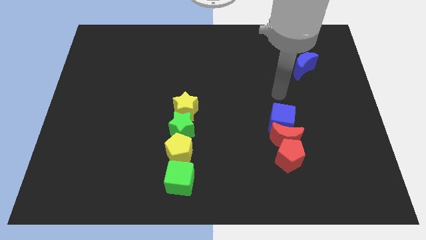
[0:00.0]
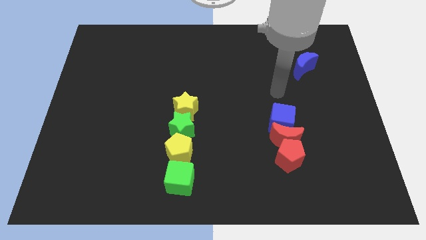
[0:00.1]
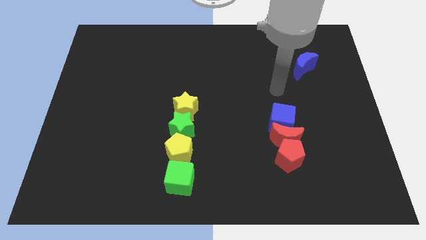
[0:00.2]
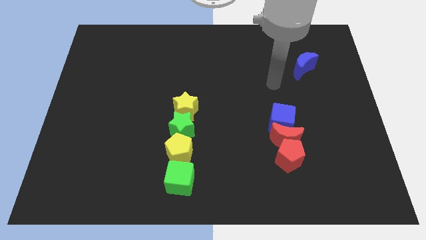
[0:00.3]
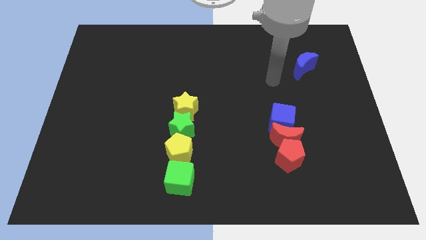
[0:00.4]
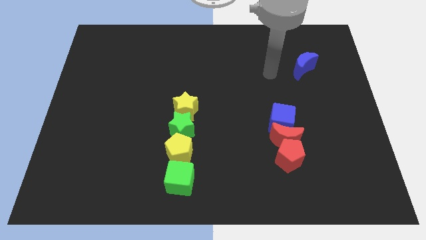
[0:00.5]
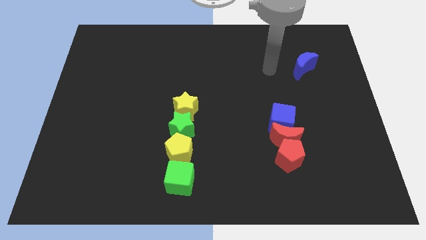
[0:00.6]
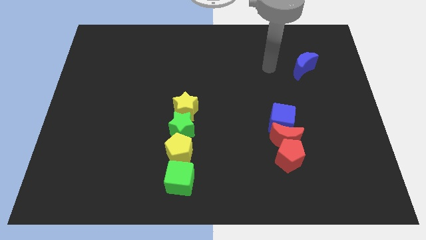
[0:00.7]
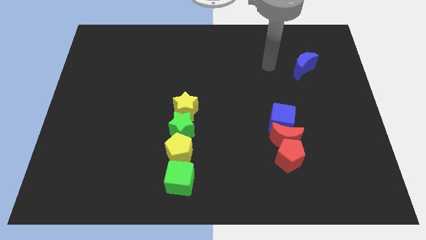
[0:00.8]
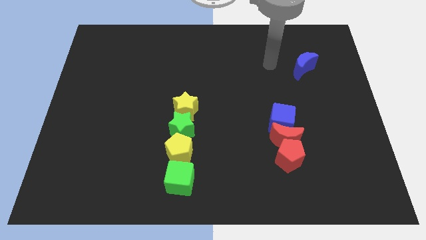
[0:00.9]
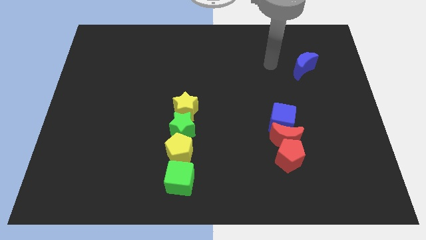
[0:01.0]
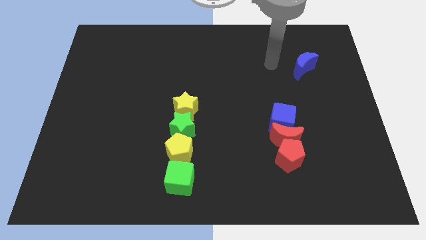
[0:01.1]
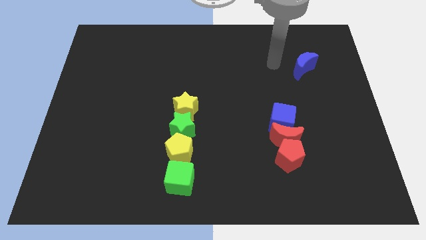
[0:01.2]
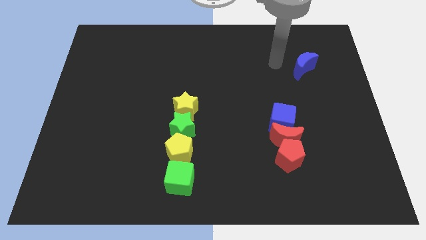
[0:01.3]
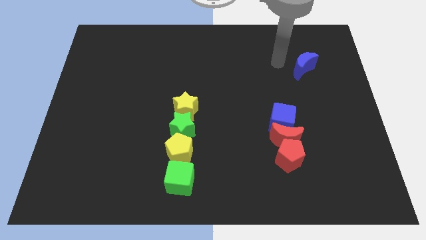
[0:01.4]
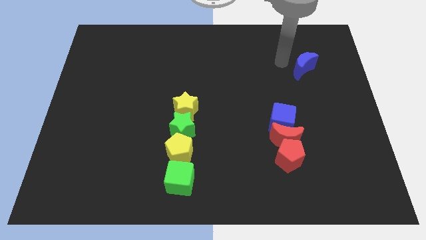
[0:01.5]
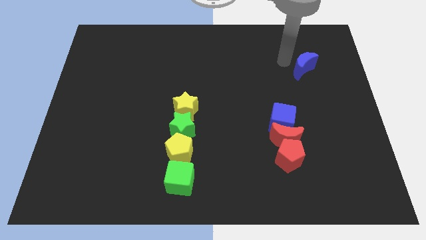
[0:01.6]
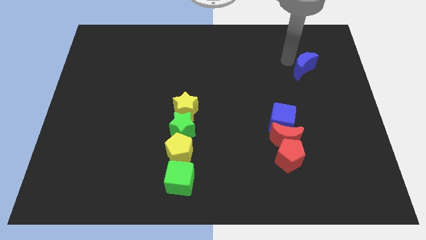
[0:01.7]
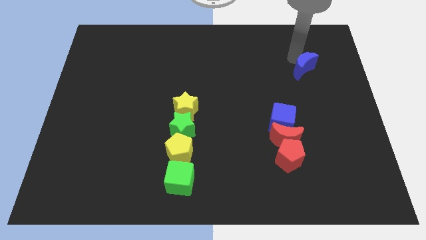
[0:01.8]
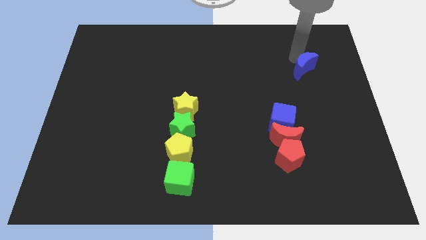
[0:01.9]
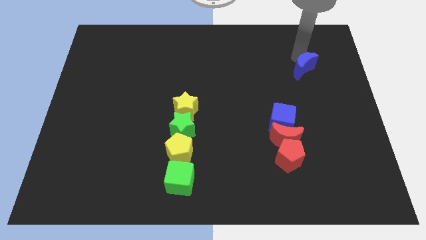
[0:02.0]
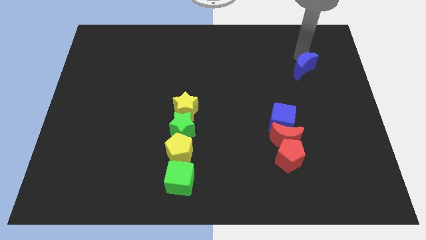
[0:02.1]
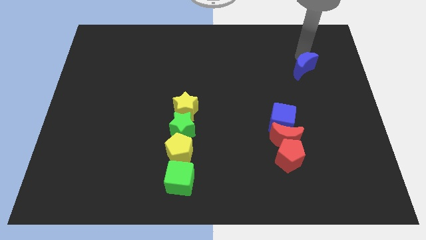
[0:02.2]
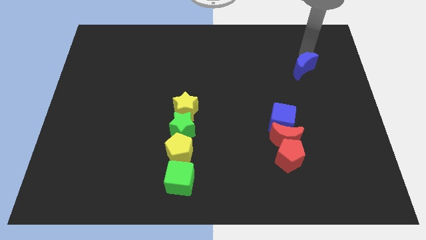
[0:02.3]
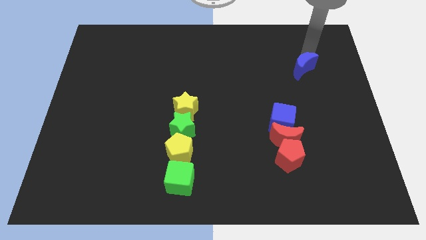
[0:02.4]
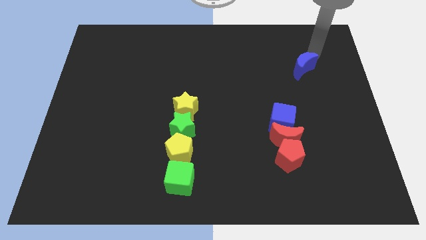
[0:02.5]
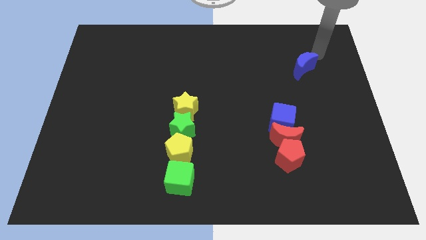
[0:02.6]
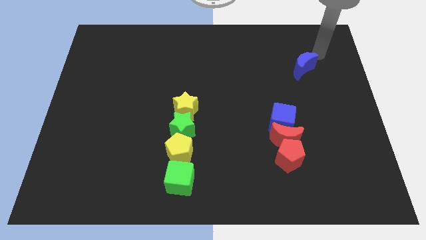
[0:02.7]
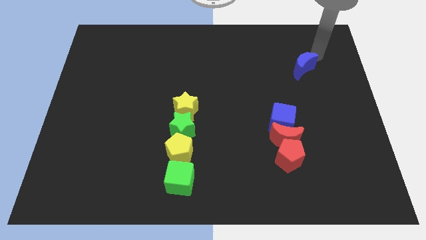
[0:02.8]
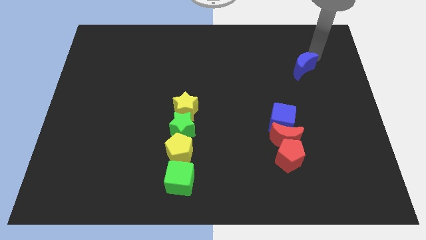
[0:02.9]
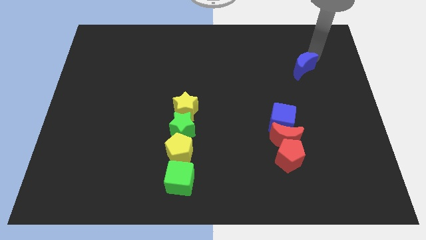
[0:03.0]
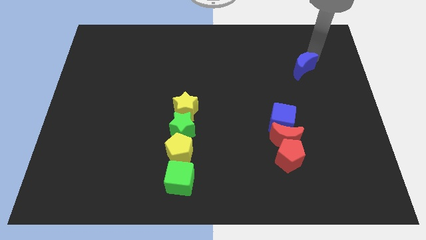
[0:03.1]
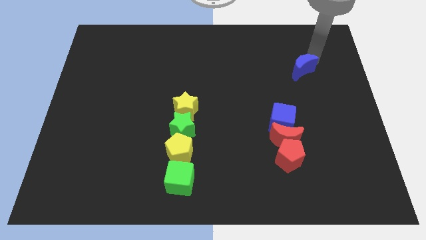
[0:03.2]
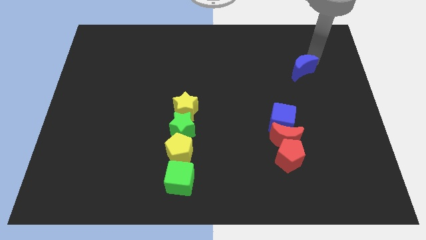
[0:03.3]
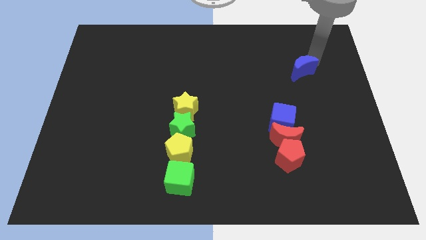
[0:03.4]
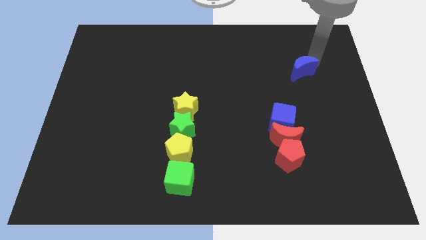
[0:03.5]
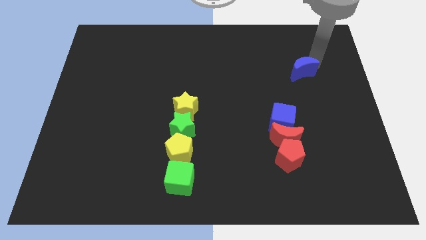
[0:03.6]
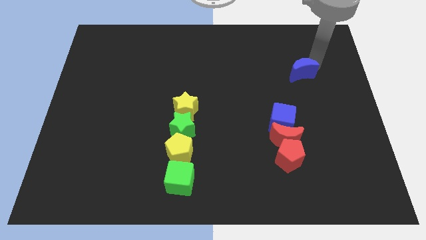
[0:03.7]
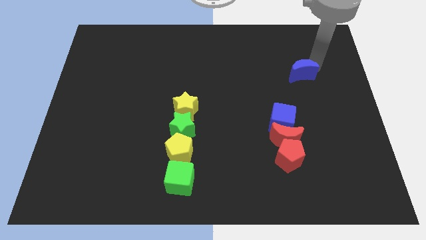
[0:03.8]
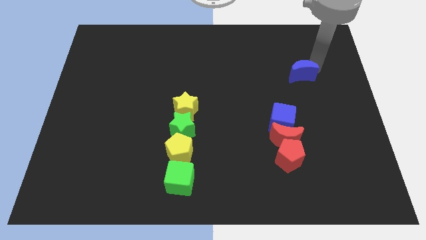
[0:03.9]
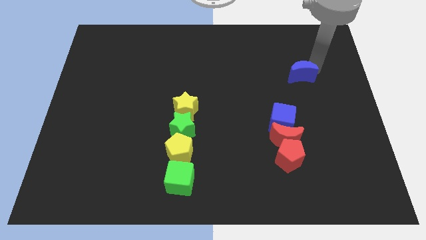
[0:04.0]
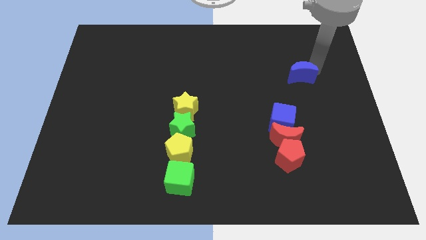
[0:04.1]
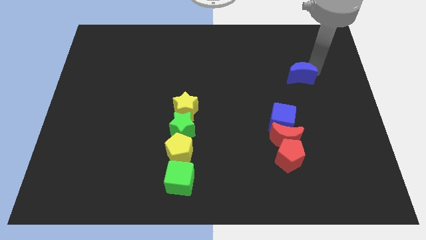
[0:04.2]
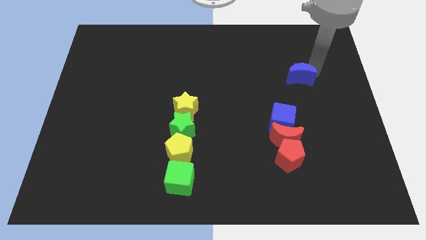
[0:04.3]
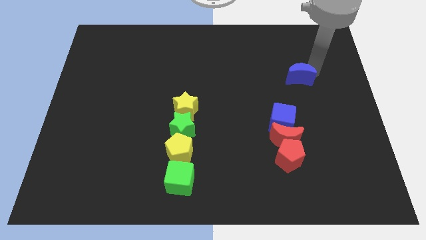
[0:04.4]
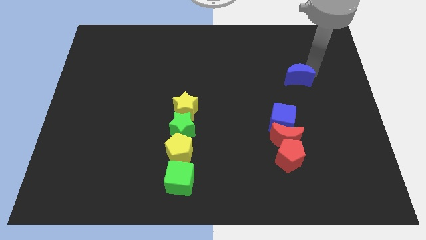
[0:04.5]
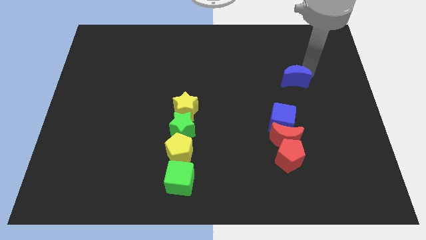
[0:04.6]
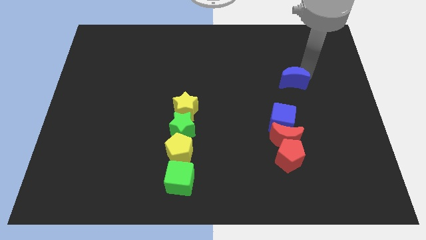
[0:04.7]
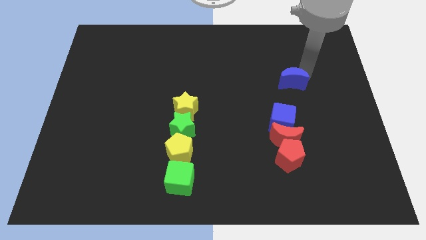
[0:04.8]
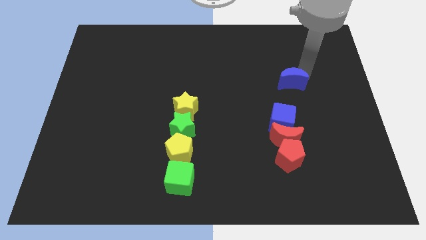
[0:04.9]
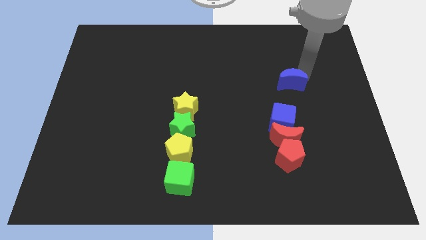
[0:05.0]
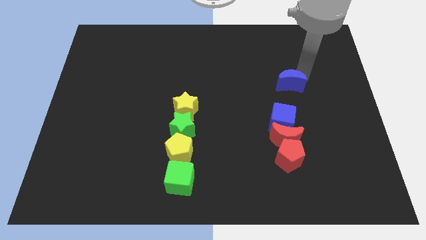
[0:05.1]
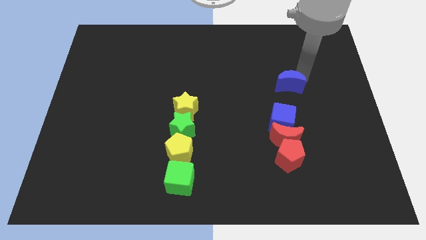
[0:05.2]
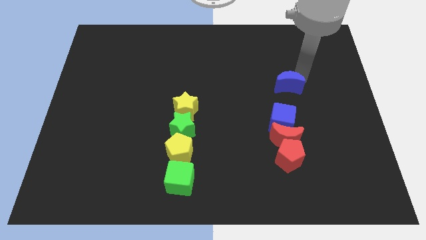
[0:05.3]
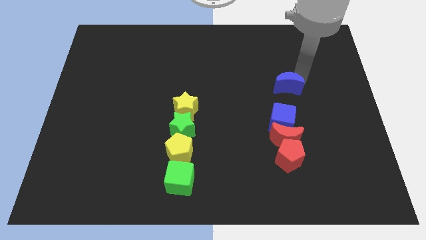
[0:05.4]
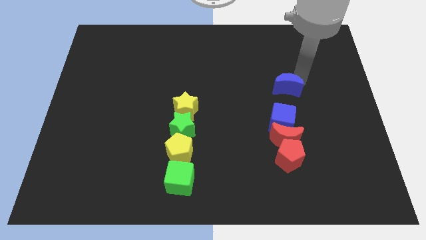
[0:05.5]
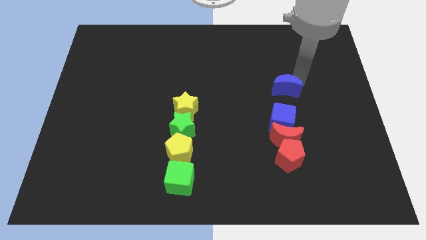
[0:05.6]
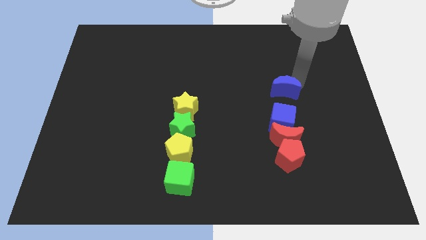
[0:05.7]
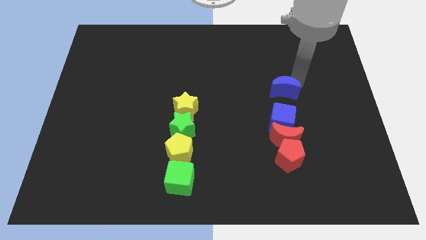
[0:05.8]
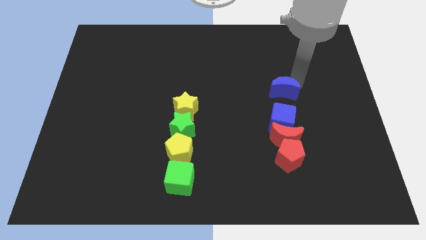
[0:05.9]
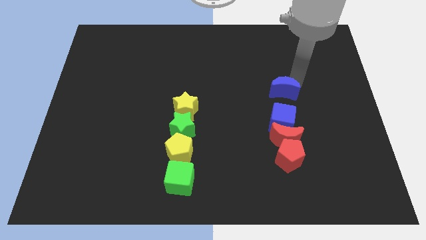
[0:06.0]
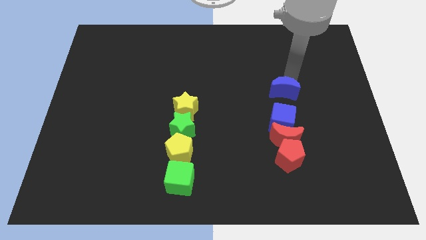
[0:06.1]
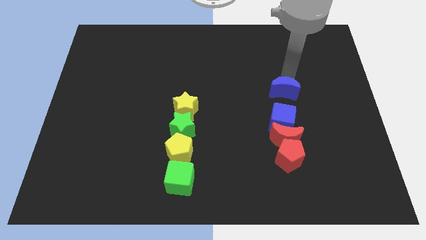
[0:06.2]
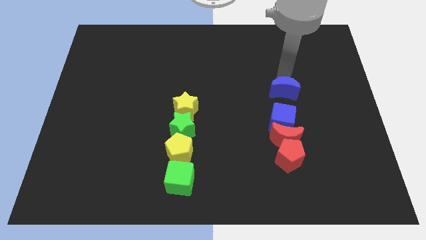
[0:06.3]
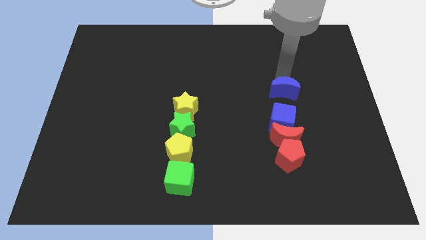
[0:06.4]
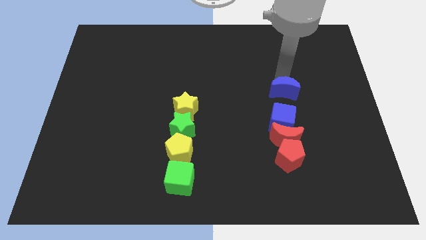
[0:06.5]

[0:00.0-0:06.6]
push the blue crescent to the top of the blue cube

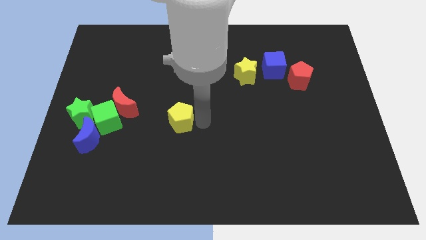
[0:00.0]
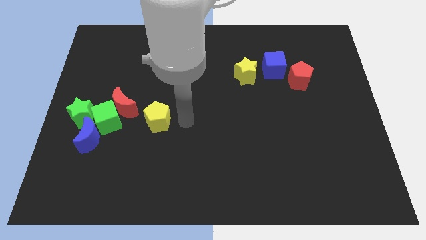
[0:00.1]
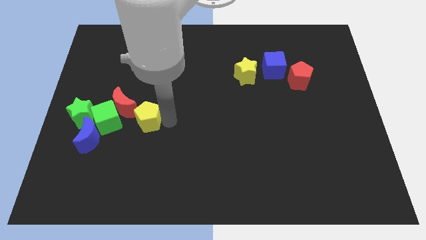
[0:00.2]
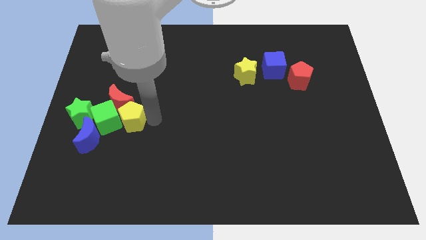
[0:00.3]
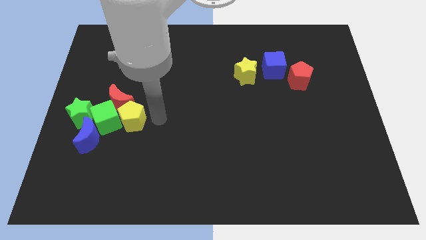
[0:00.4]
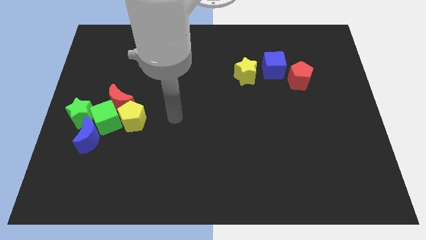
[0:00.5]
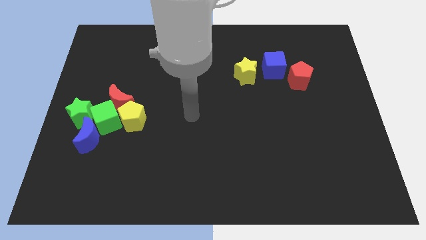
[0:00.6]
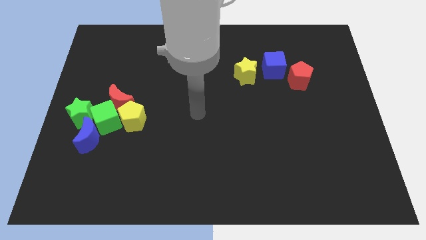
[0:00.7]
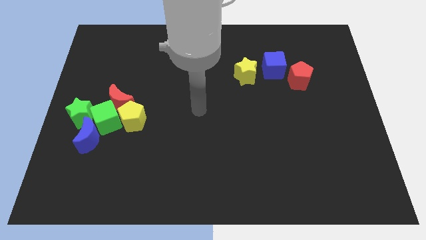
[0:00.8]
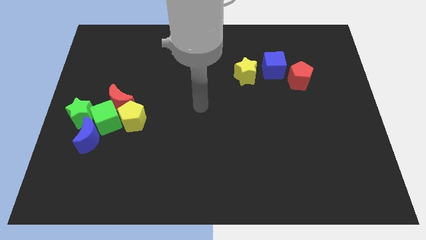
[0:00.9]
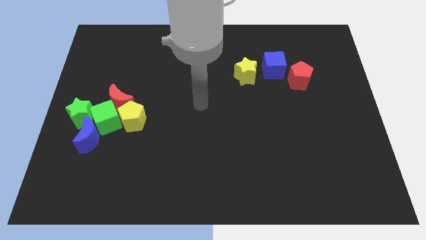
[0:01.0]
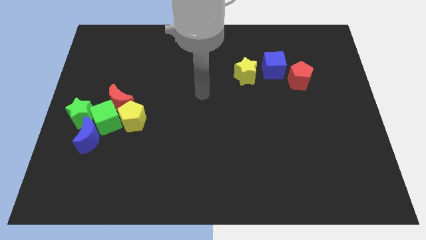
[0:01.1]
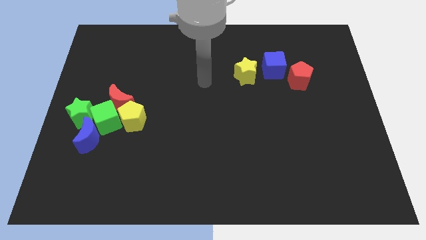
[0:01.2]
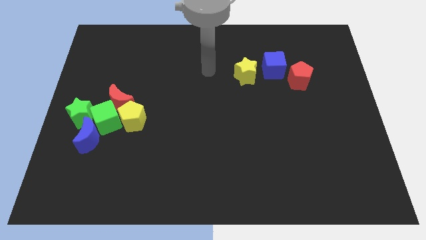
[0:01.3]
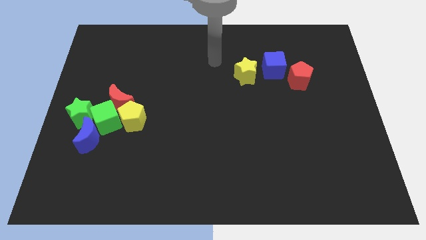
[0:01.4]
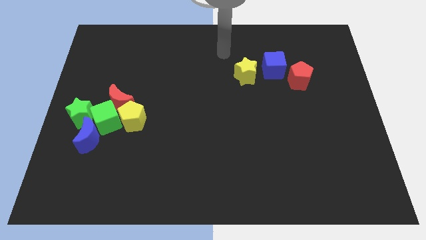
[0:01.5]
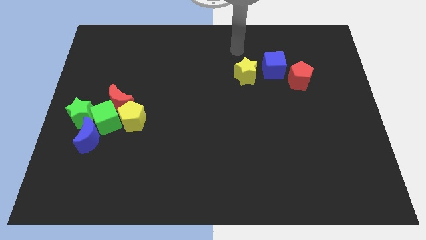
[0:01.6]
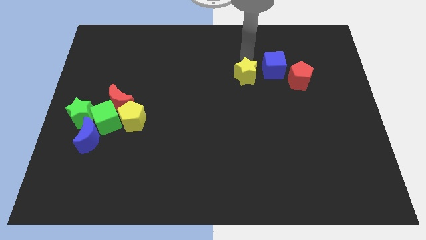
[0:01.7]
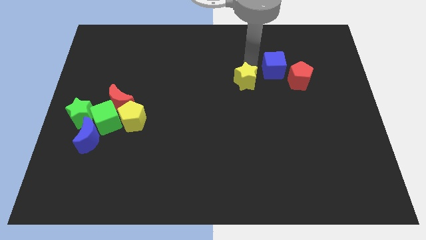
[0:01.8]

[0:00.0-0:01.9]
move your arm towards the yellow star

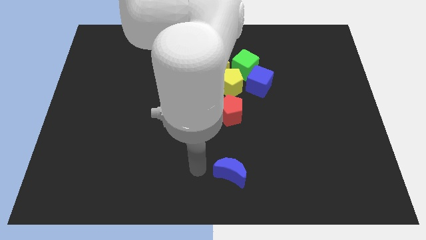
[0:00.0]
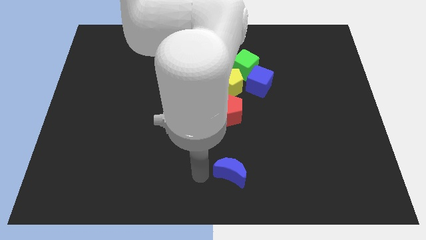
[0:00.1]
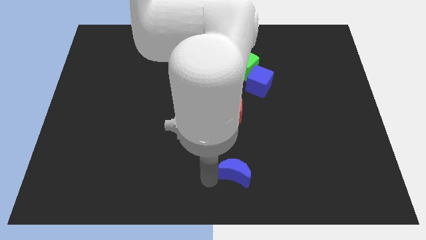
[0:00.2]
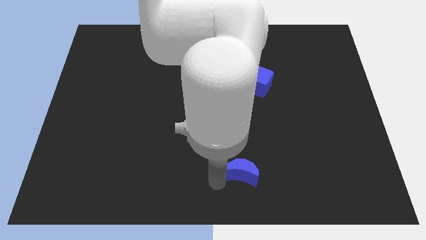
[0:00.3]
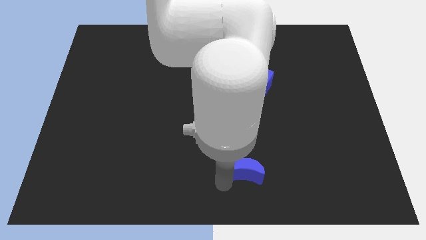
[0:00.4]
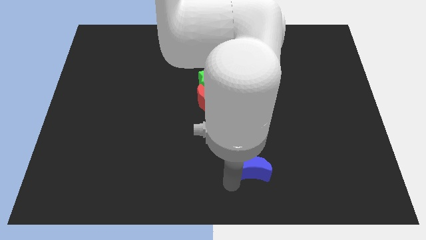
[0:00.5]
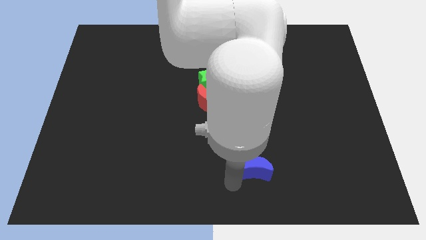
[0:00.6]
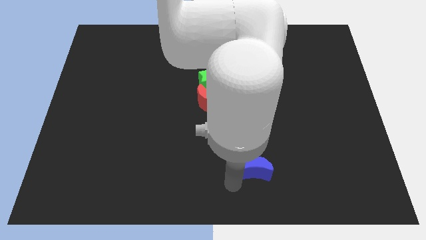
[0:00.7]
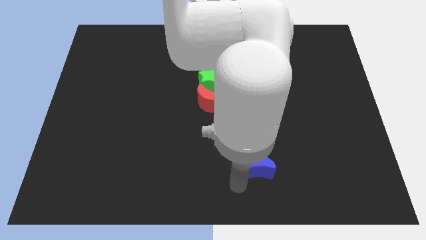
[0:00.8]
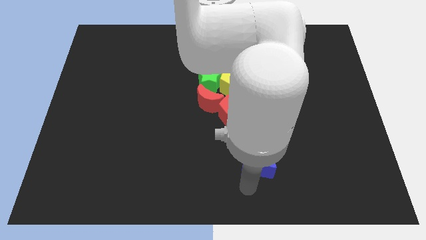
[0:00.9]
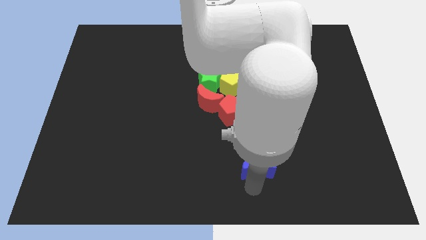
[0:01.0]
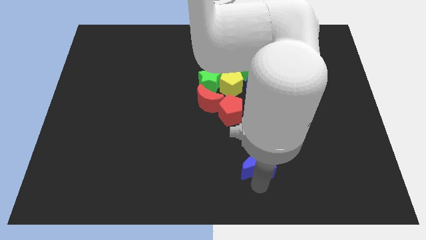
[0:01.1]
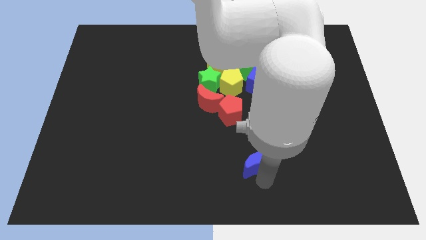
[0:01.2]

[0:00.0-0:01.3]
move the blue crescent to the right
